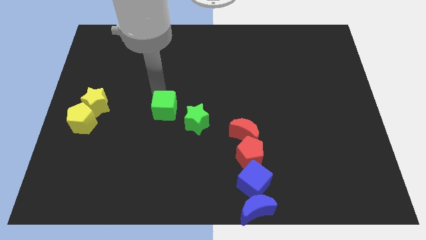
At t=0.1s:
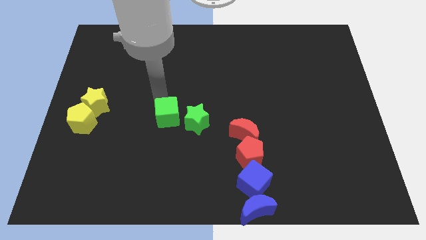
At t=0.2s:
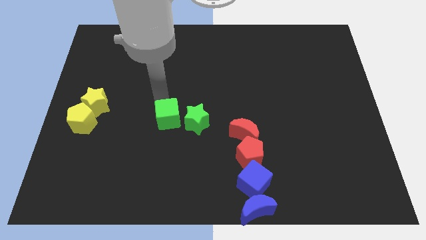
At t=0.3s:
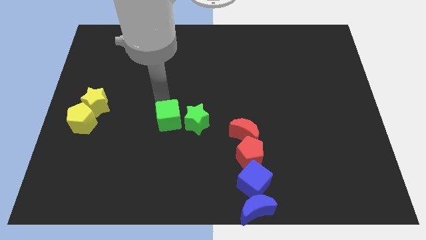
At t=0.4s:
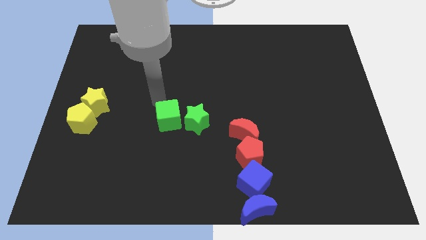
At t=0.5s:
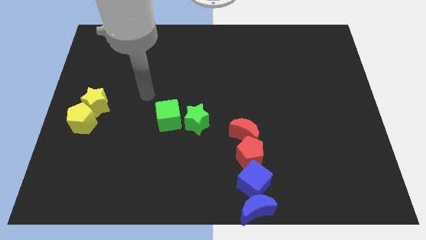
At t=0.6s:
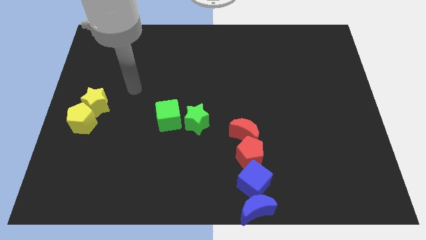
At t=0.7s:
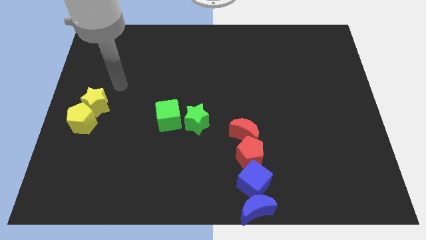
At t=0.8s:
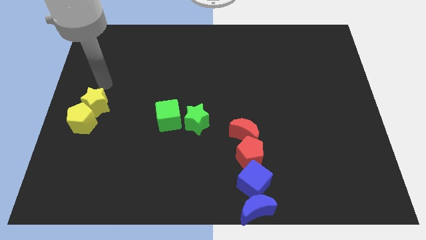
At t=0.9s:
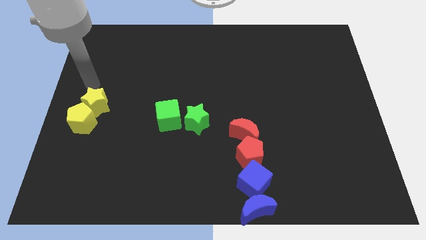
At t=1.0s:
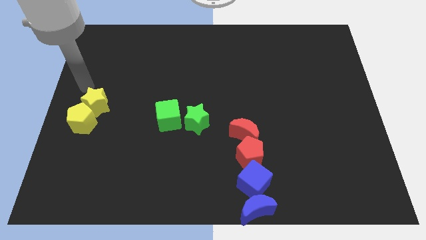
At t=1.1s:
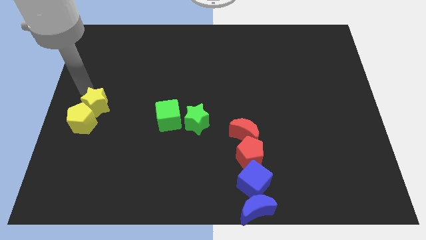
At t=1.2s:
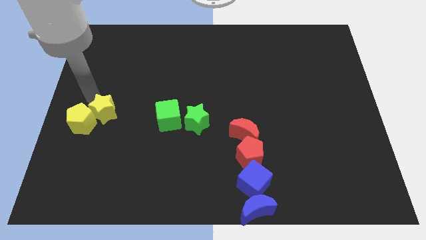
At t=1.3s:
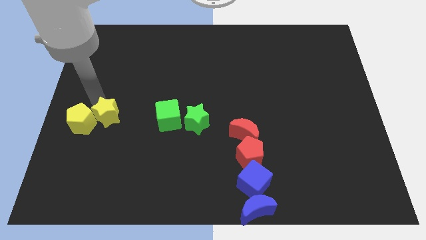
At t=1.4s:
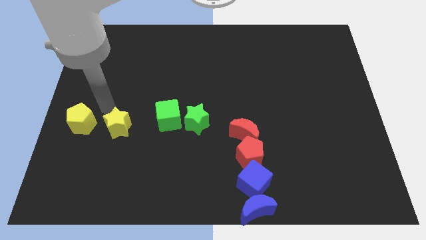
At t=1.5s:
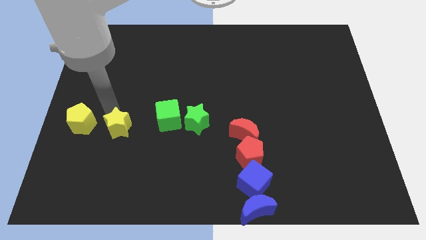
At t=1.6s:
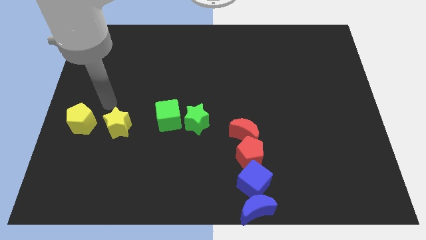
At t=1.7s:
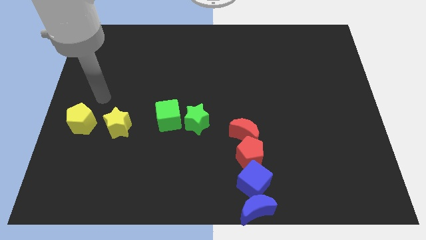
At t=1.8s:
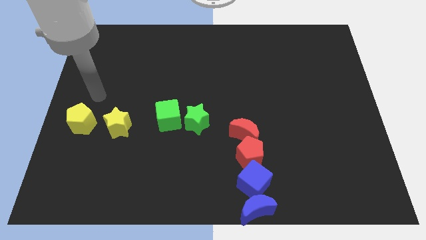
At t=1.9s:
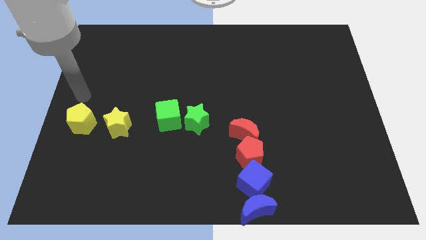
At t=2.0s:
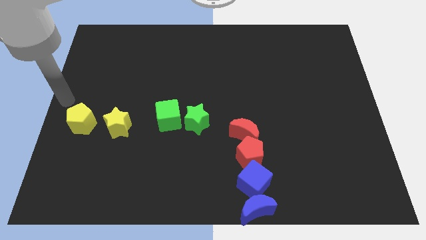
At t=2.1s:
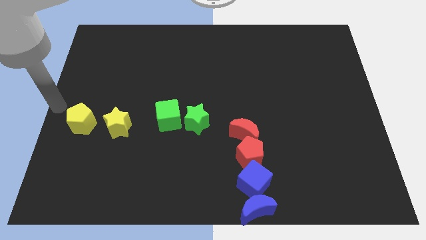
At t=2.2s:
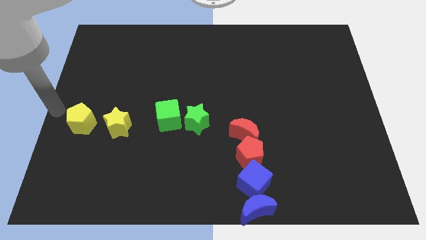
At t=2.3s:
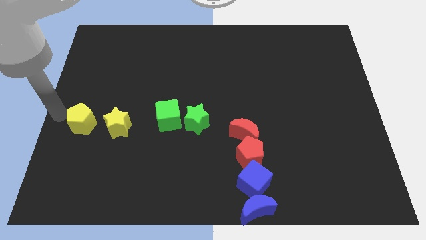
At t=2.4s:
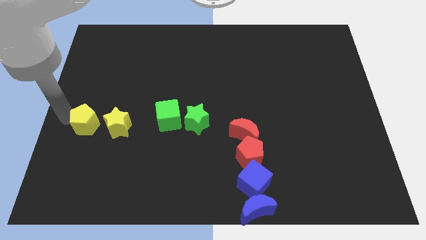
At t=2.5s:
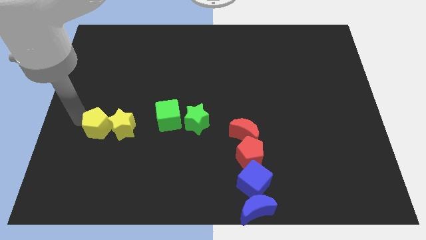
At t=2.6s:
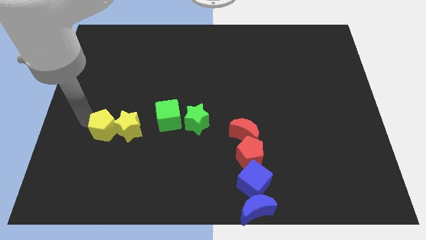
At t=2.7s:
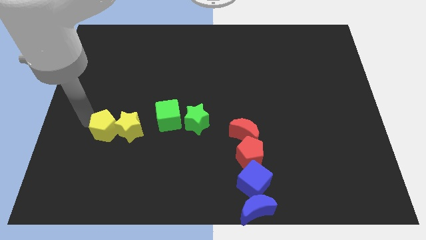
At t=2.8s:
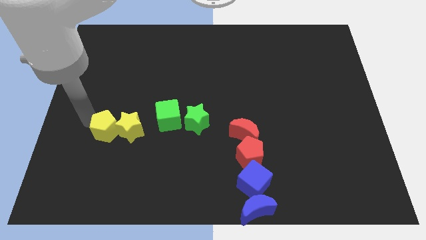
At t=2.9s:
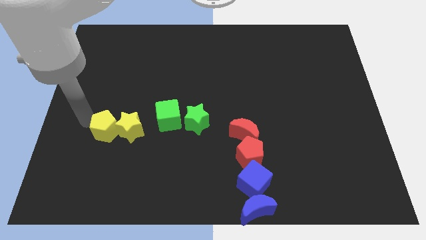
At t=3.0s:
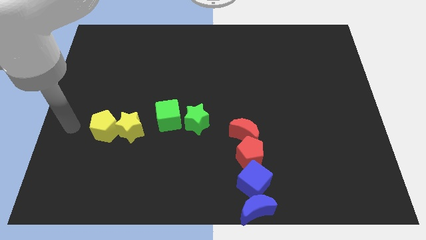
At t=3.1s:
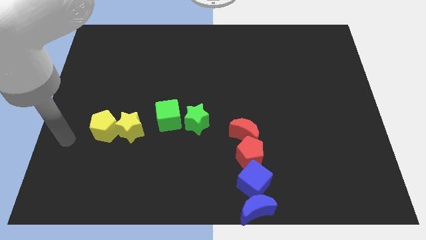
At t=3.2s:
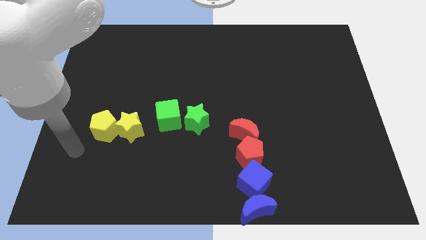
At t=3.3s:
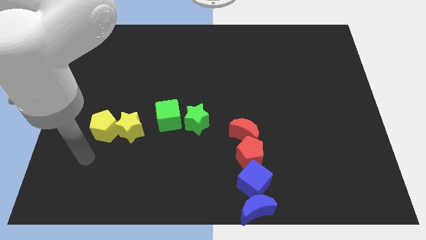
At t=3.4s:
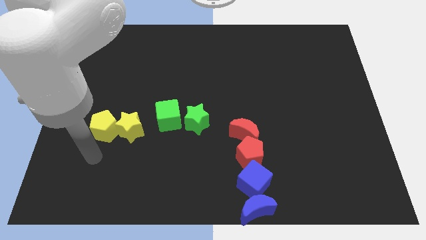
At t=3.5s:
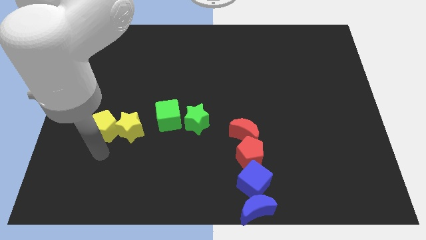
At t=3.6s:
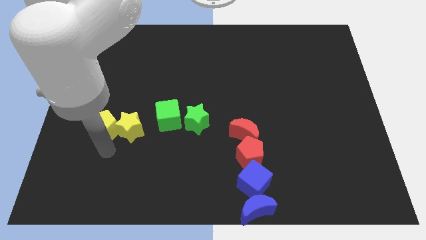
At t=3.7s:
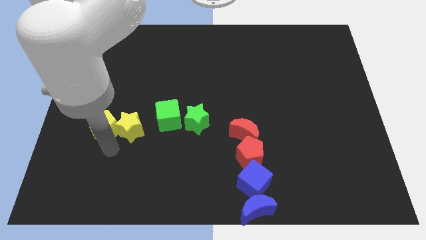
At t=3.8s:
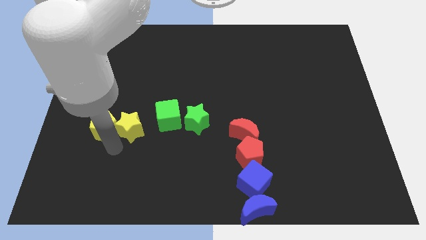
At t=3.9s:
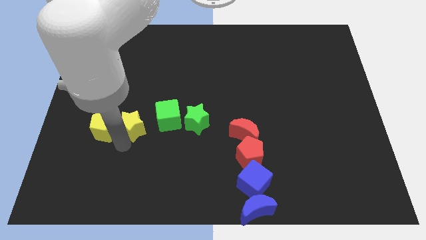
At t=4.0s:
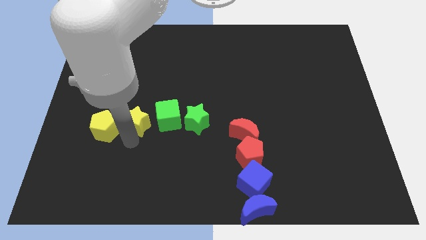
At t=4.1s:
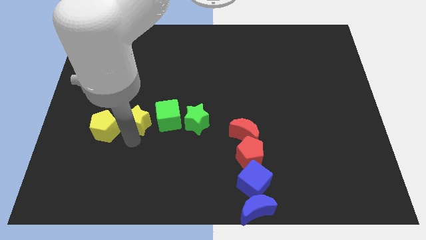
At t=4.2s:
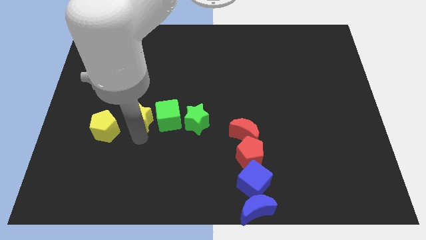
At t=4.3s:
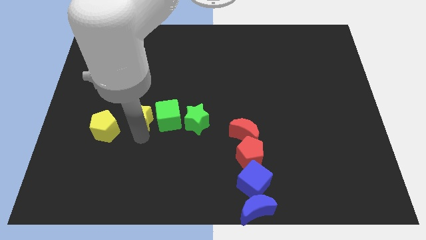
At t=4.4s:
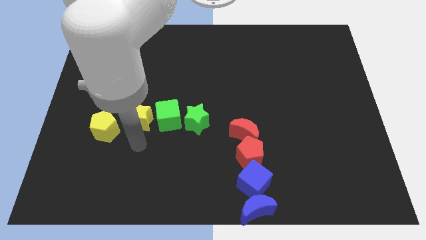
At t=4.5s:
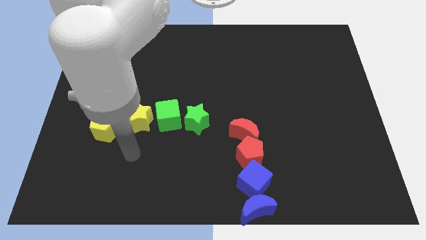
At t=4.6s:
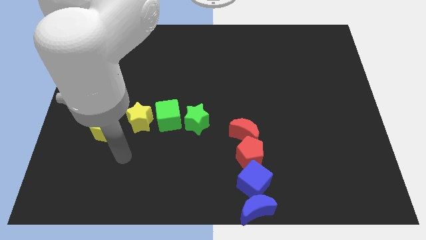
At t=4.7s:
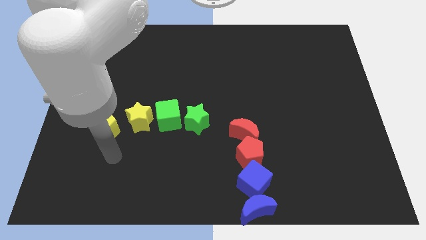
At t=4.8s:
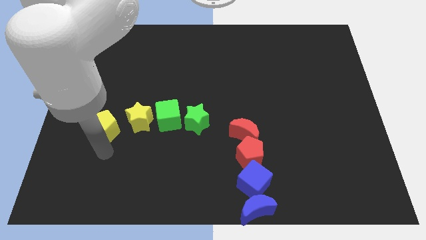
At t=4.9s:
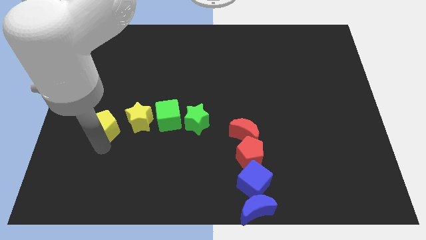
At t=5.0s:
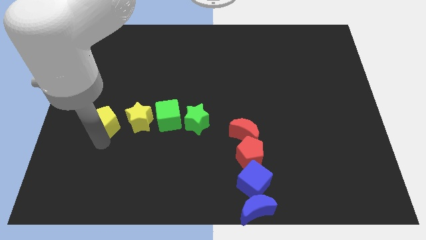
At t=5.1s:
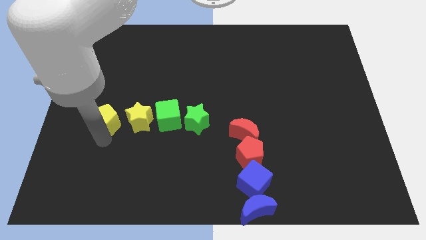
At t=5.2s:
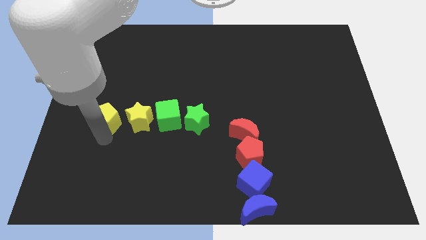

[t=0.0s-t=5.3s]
place the green cubeyellow star and the yellow pentagon together to form a horizontal line

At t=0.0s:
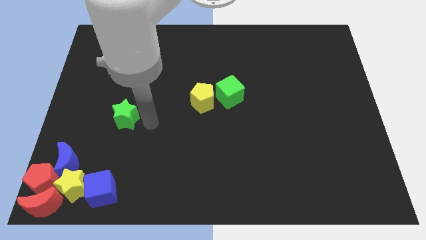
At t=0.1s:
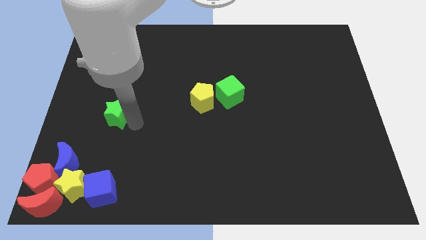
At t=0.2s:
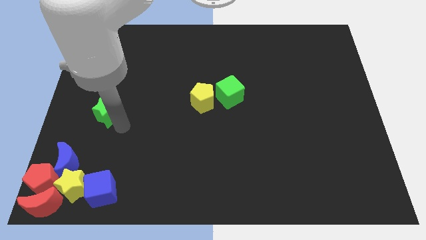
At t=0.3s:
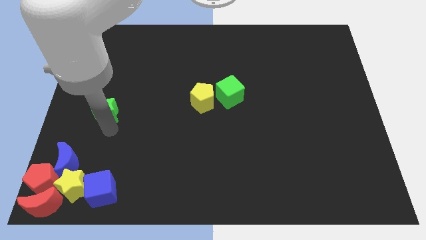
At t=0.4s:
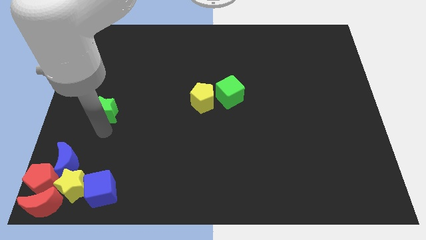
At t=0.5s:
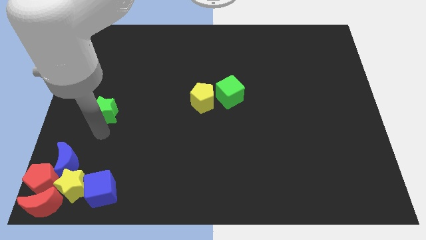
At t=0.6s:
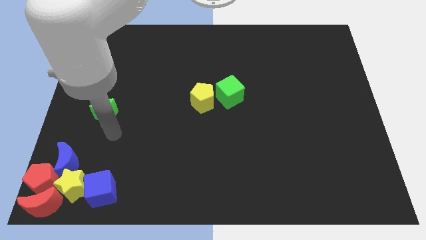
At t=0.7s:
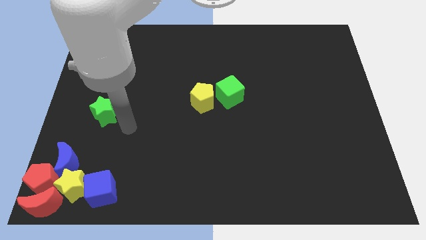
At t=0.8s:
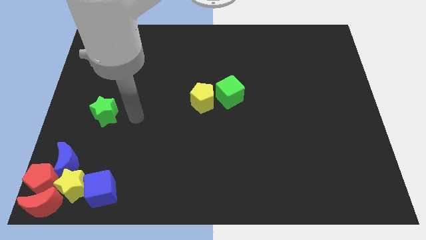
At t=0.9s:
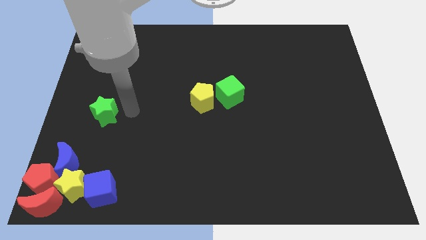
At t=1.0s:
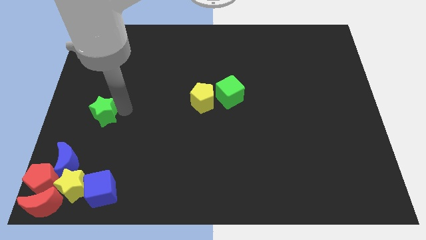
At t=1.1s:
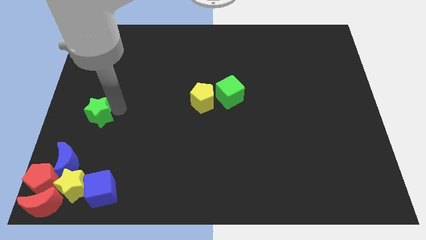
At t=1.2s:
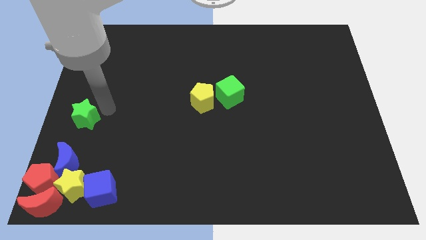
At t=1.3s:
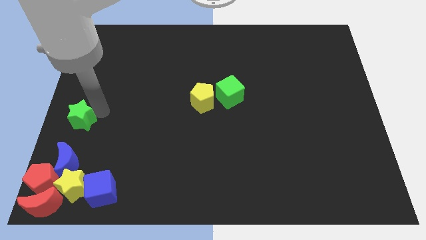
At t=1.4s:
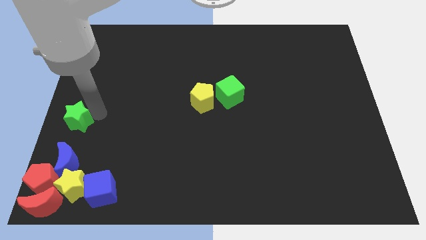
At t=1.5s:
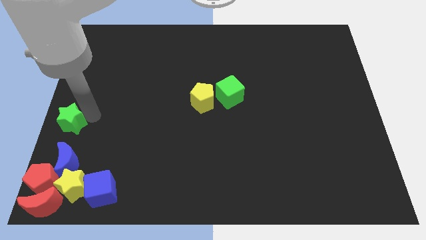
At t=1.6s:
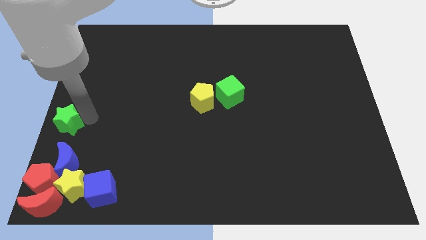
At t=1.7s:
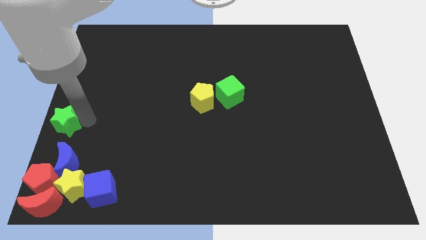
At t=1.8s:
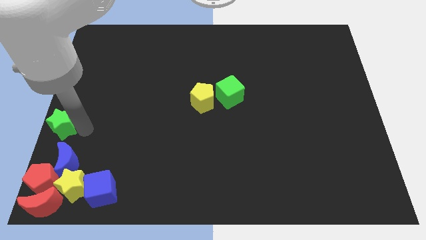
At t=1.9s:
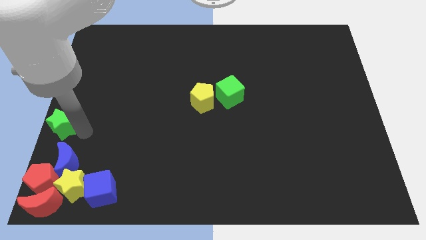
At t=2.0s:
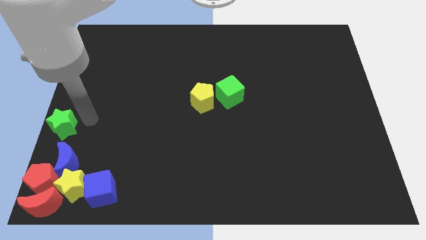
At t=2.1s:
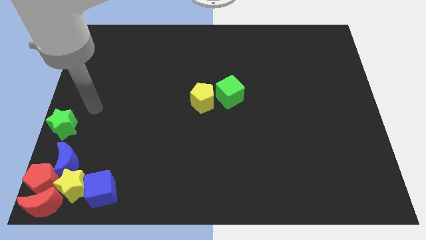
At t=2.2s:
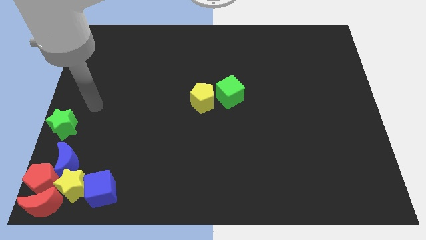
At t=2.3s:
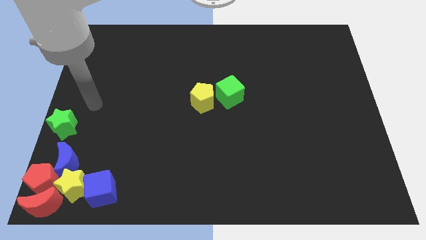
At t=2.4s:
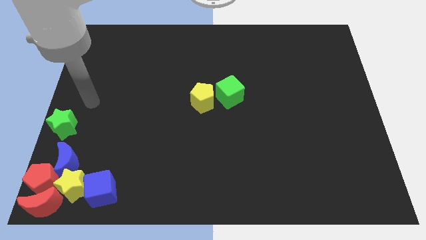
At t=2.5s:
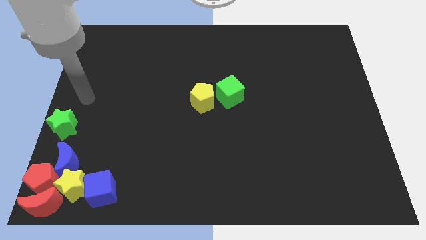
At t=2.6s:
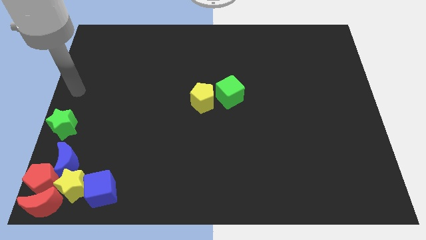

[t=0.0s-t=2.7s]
push the green star to the left center of the board

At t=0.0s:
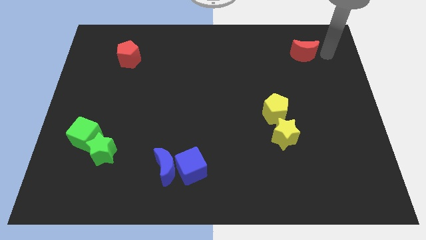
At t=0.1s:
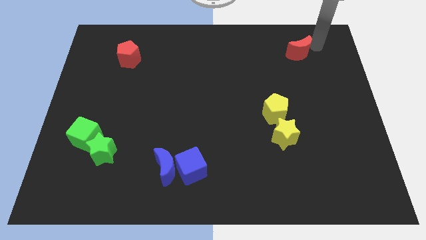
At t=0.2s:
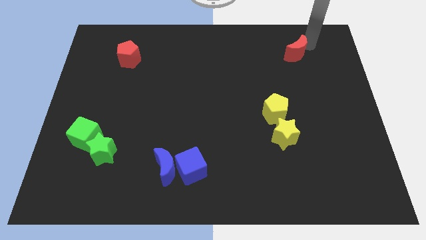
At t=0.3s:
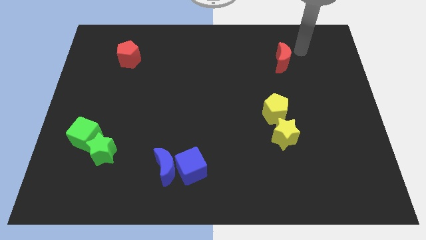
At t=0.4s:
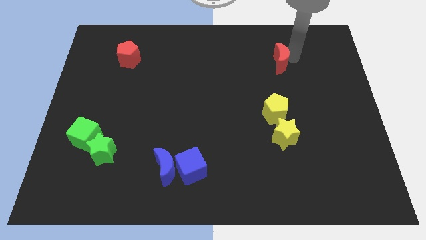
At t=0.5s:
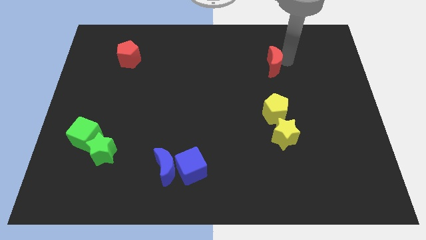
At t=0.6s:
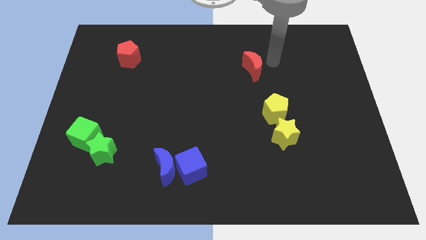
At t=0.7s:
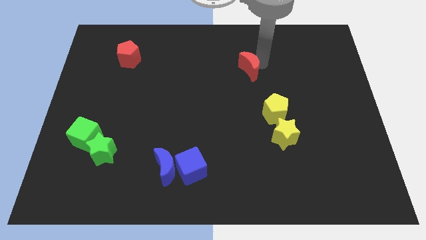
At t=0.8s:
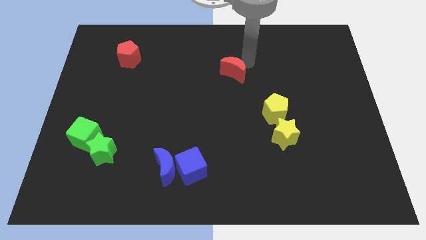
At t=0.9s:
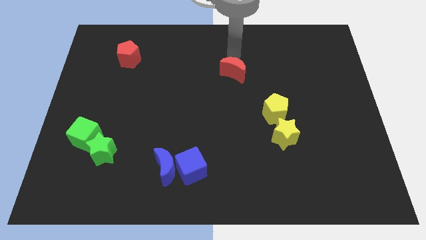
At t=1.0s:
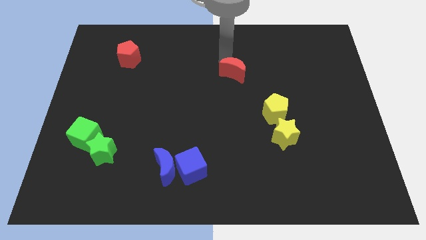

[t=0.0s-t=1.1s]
slide red moon to the top left of yellow pentagon
